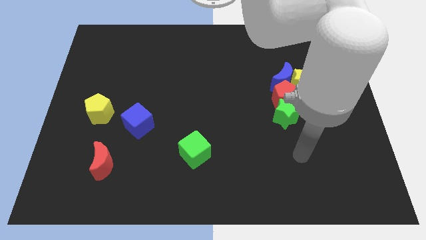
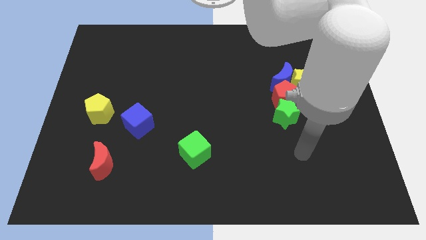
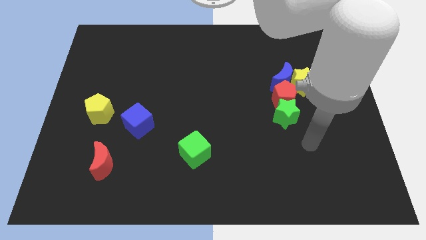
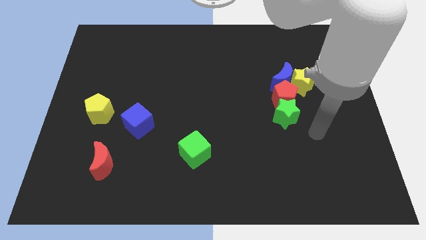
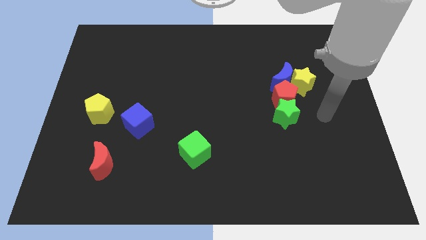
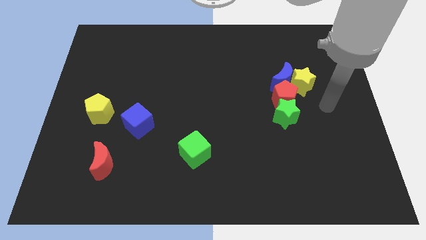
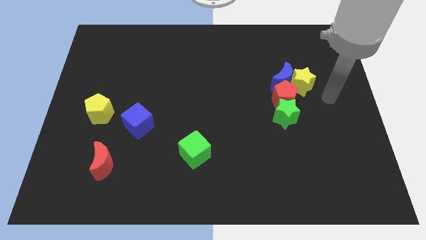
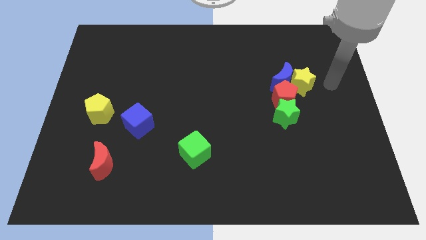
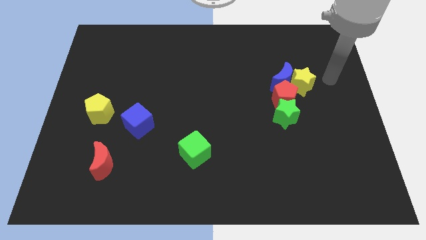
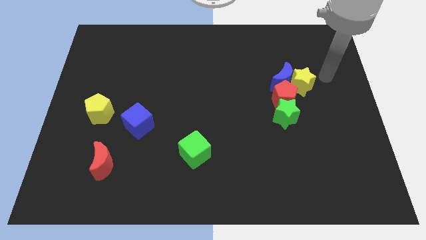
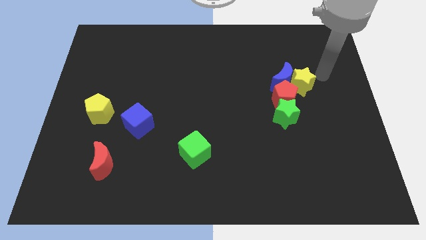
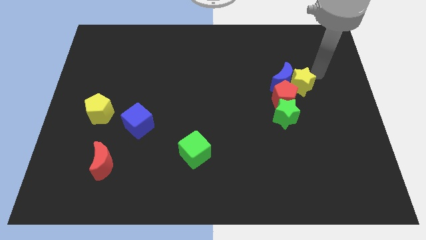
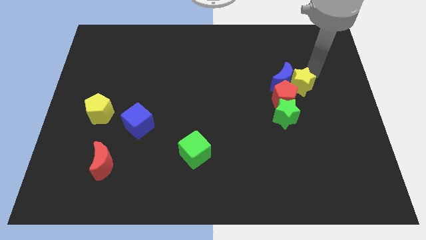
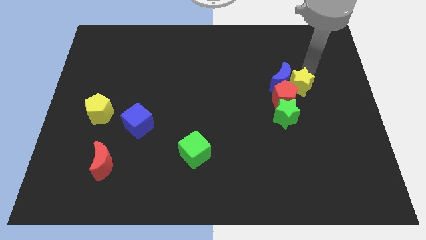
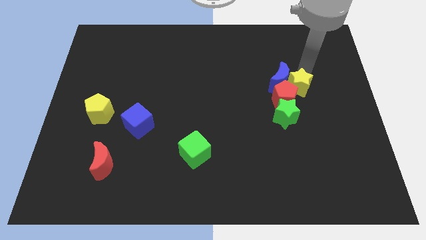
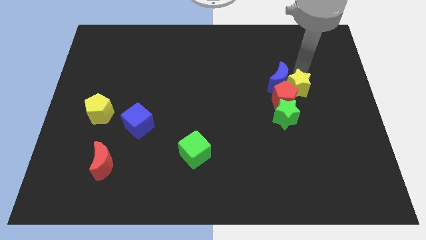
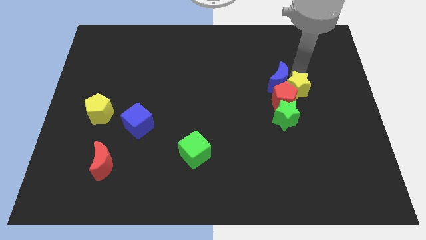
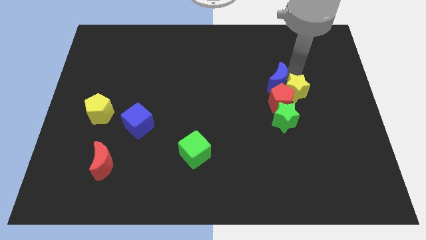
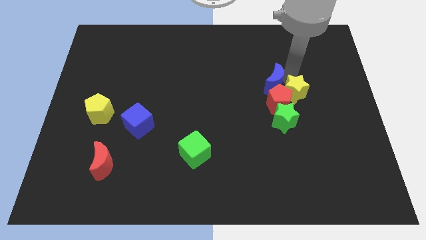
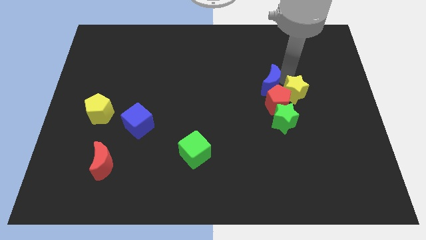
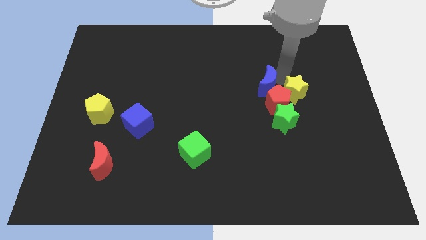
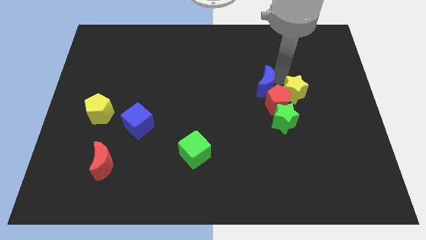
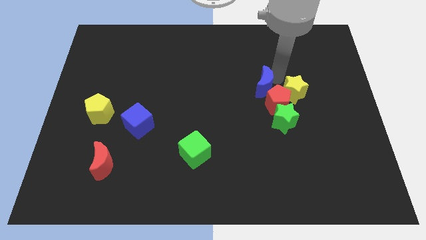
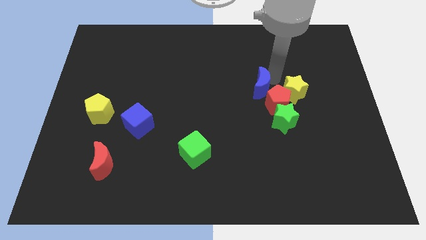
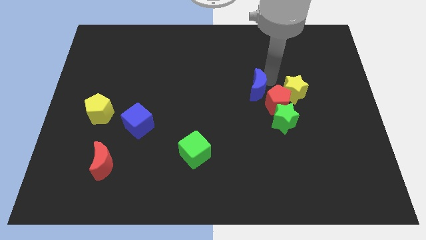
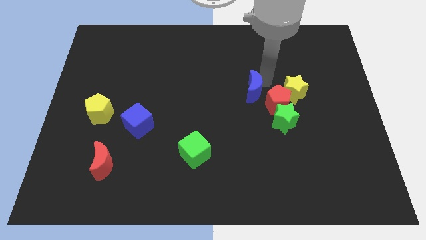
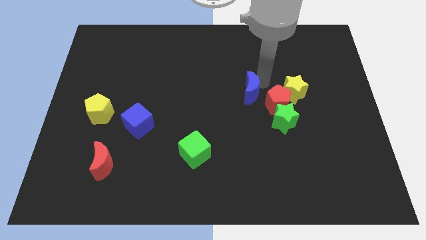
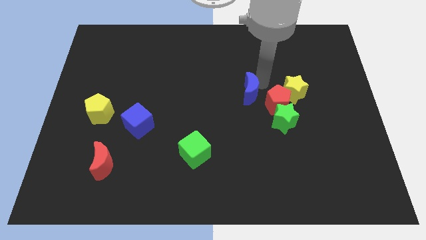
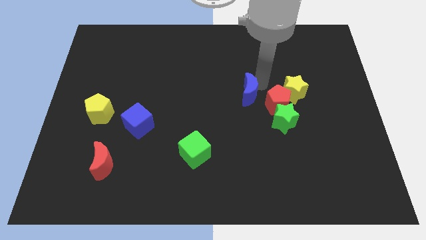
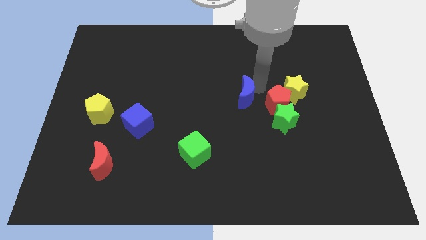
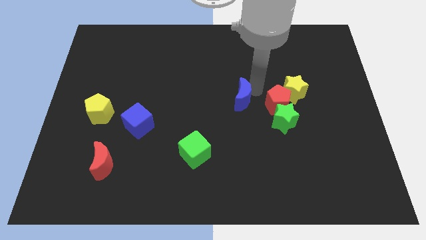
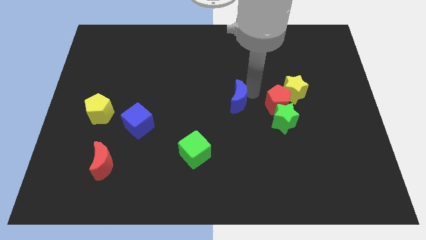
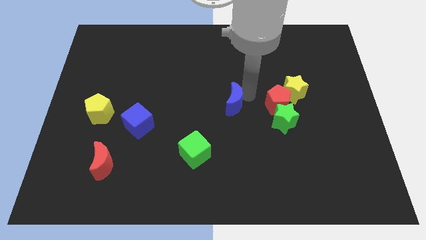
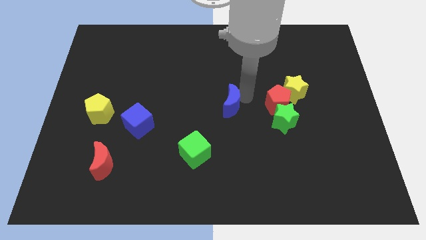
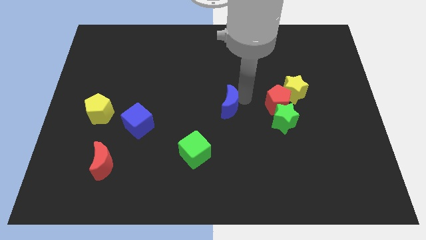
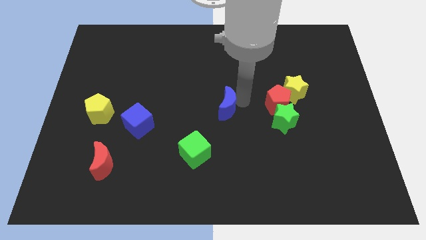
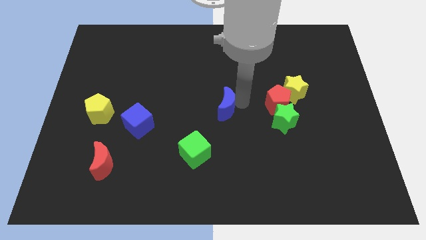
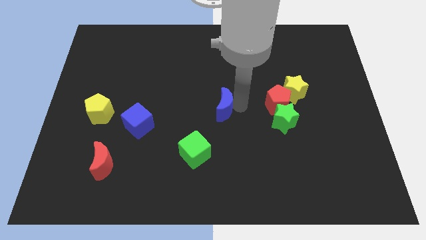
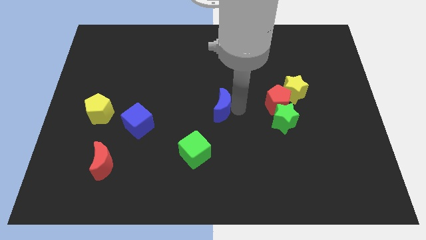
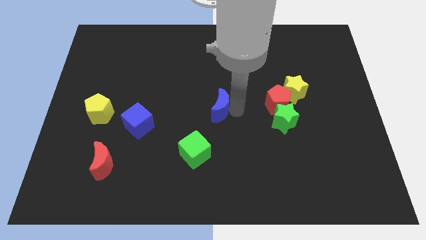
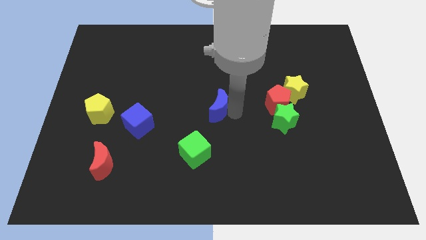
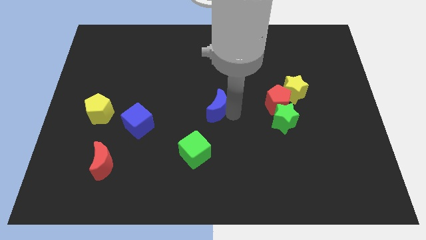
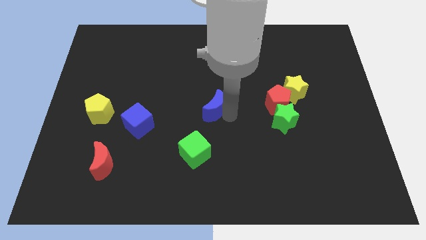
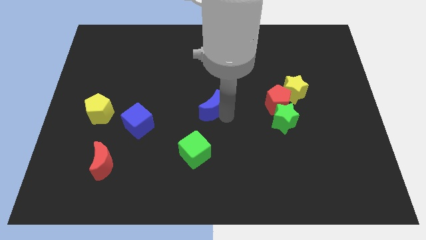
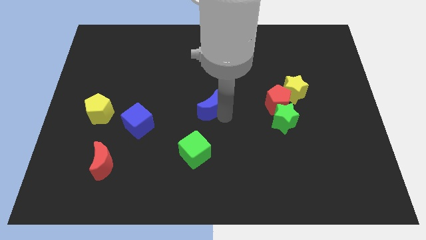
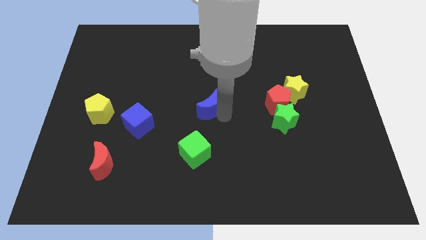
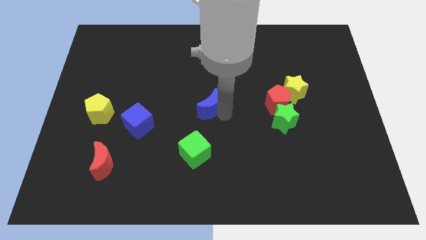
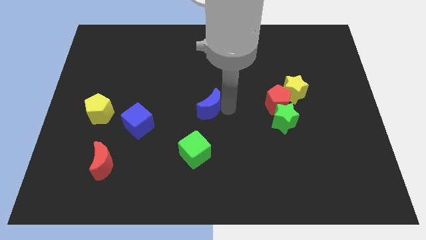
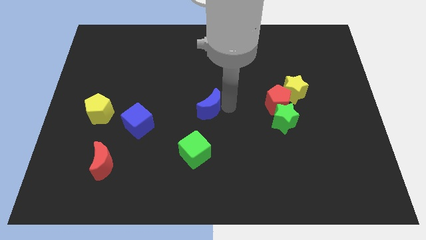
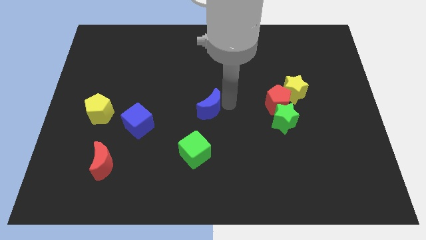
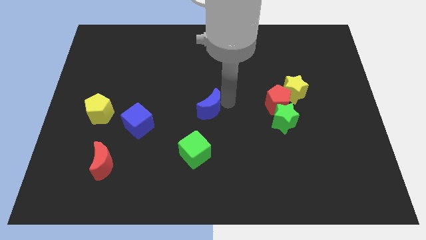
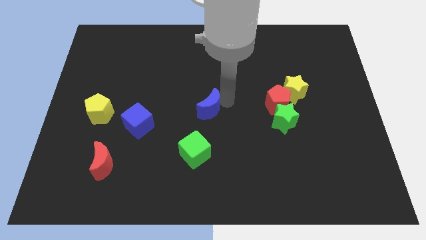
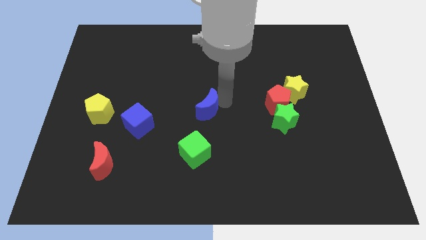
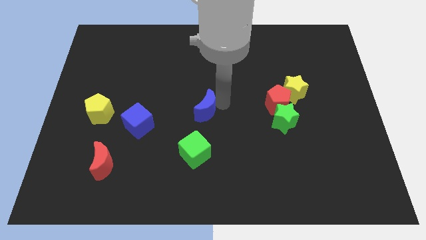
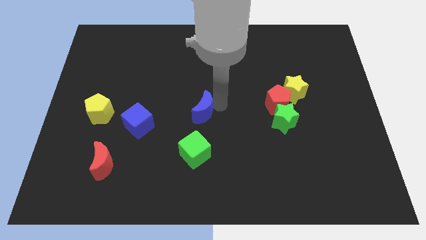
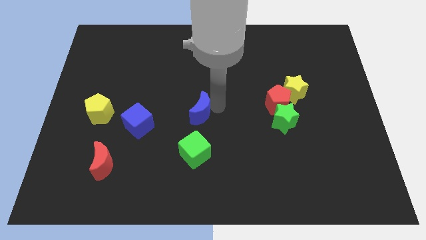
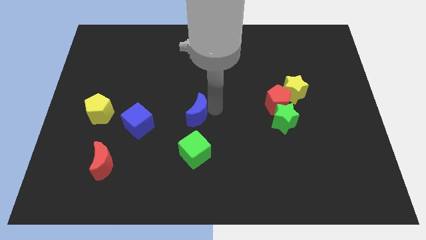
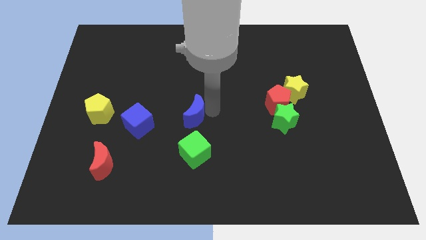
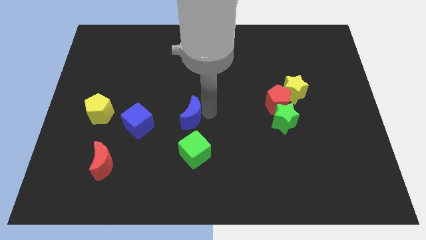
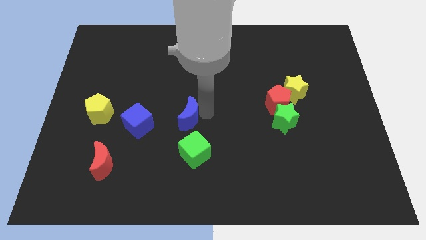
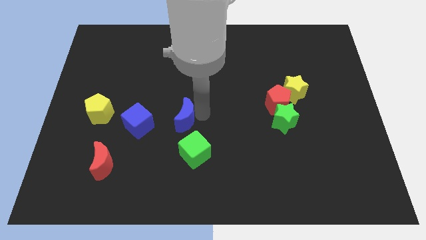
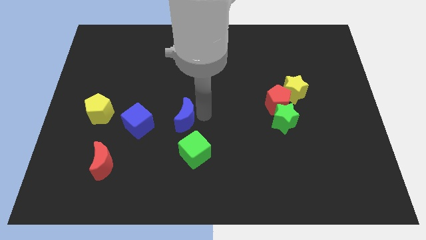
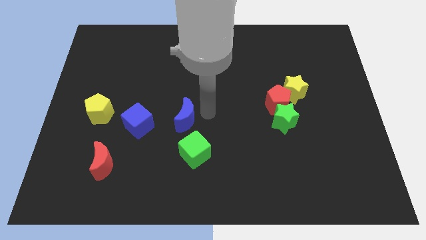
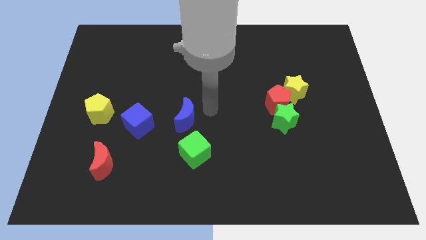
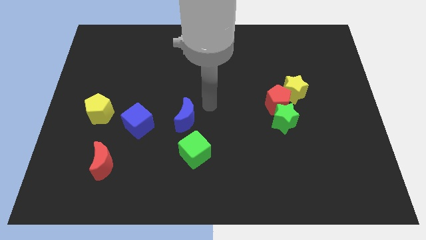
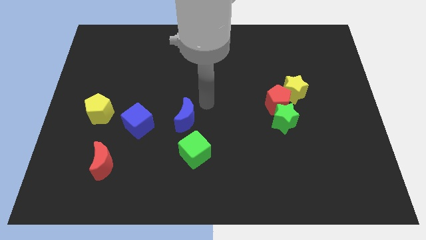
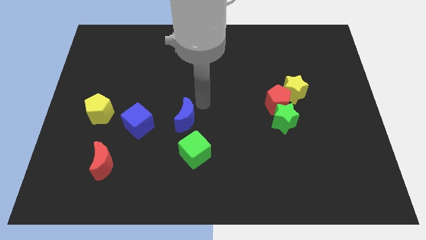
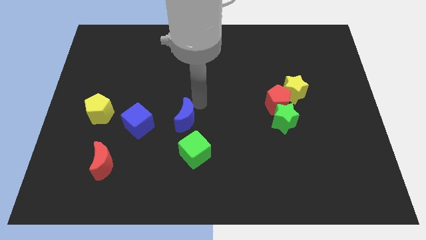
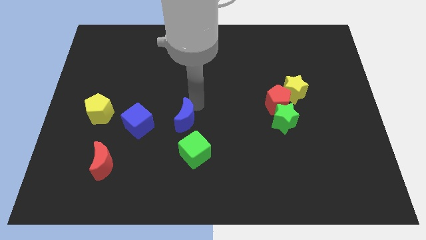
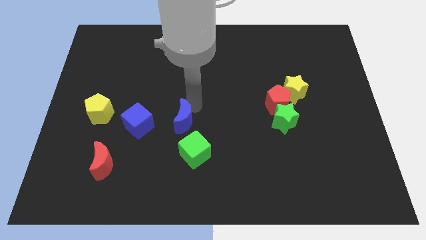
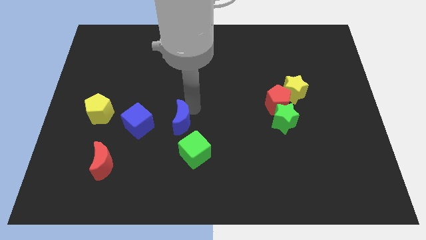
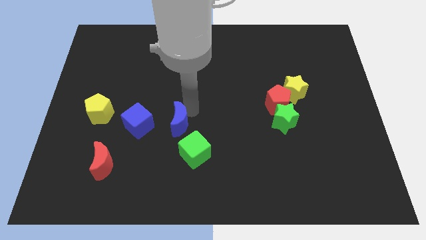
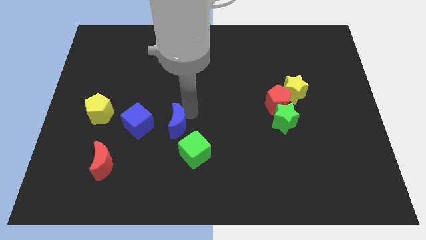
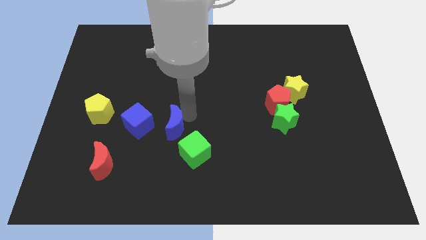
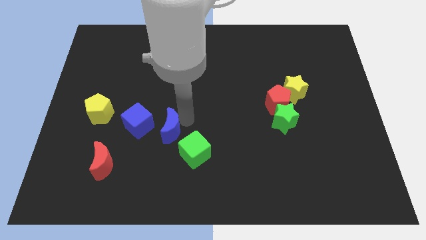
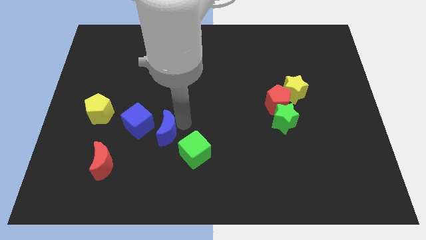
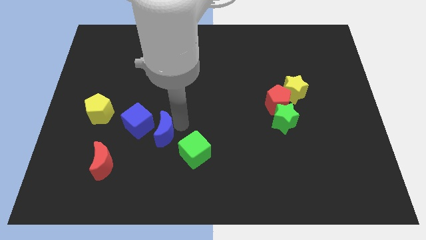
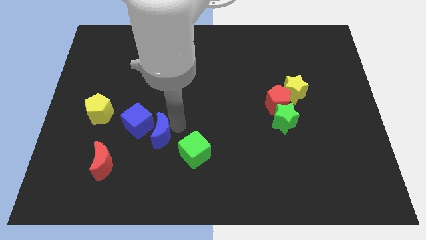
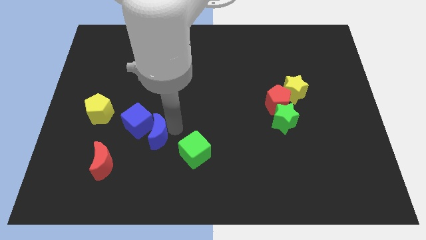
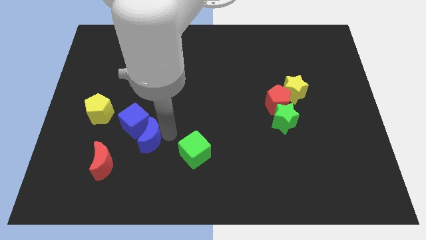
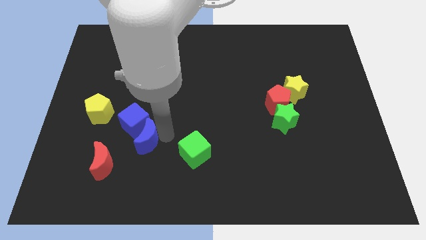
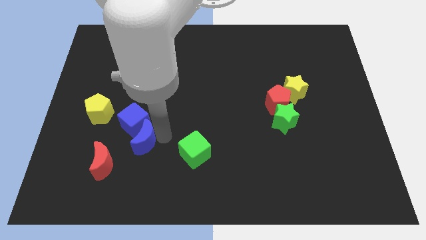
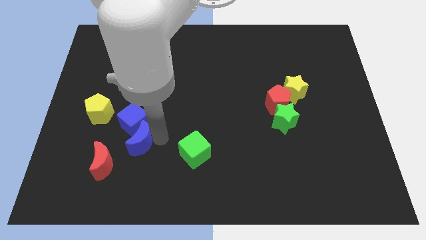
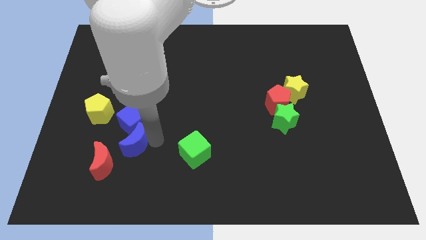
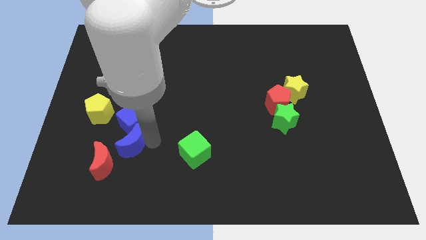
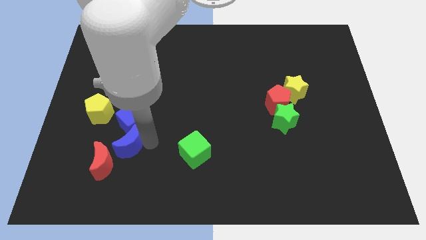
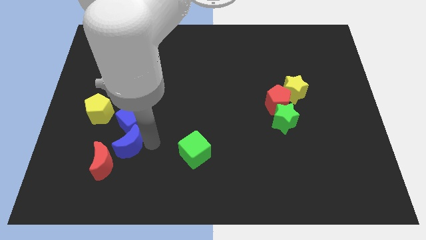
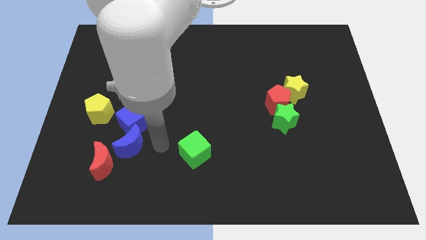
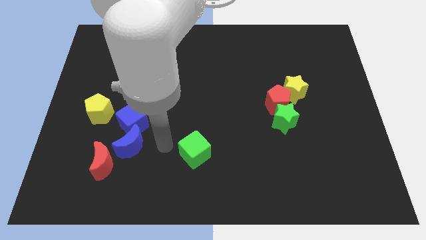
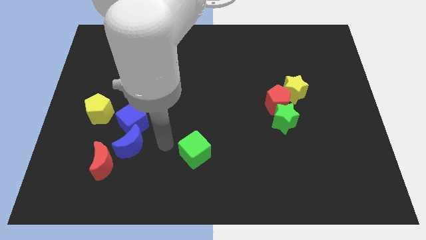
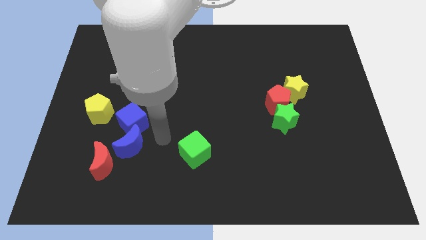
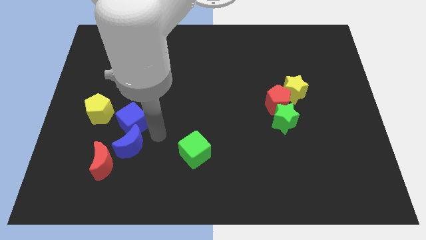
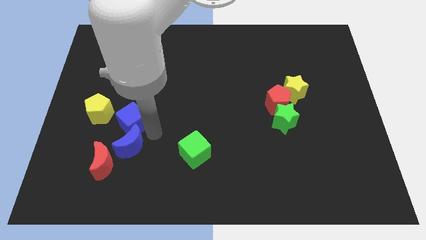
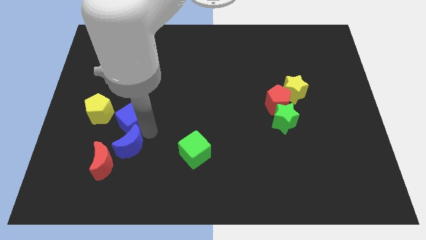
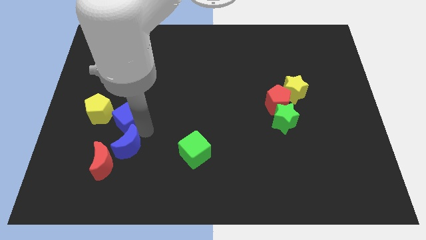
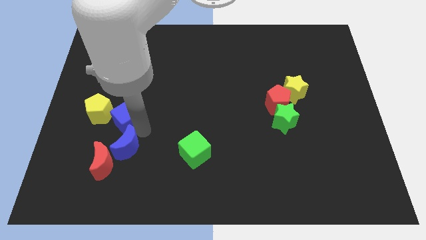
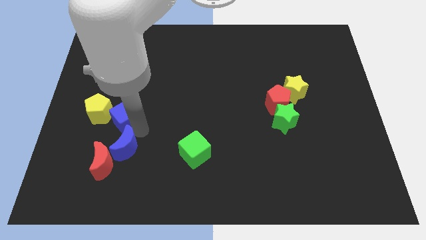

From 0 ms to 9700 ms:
slide the blue moon close to the red moon
